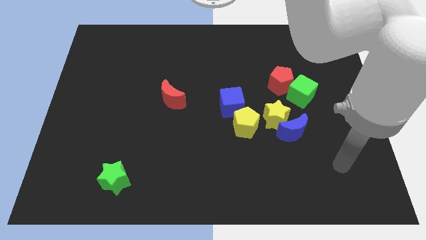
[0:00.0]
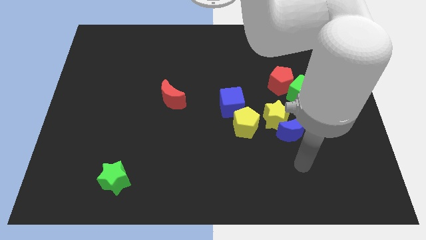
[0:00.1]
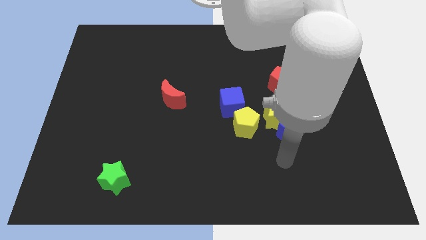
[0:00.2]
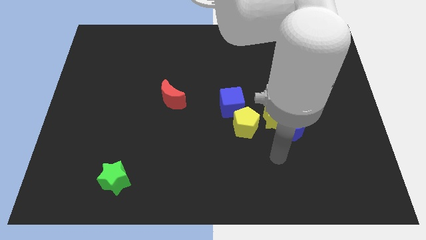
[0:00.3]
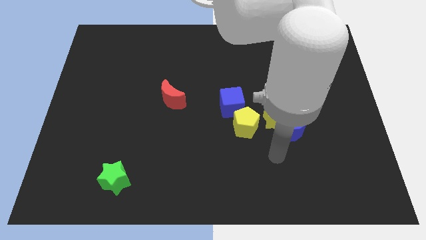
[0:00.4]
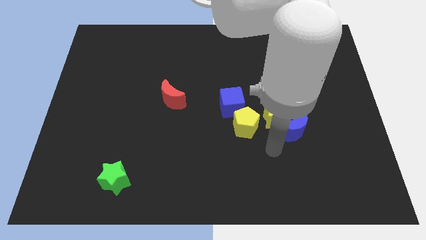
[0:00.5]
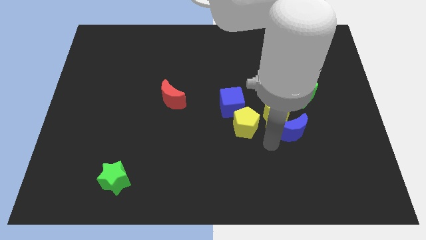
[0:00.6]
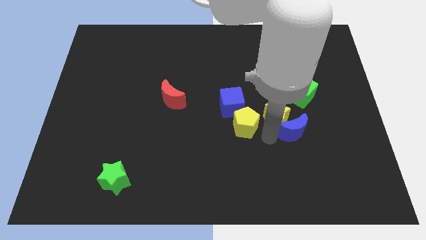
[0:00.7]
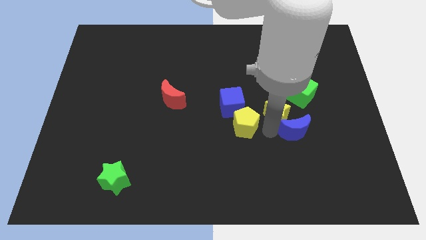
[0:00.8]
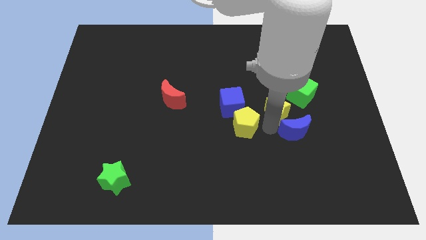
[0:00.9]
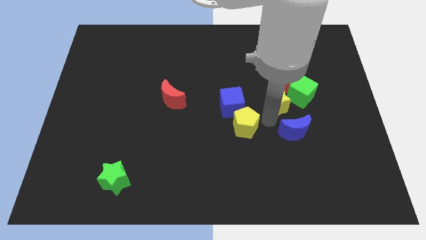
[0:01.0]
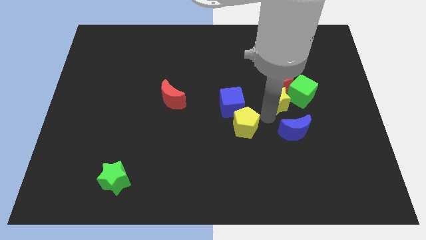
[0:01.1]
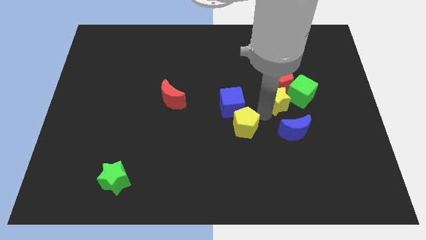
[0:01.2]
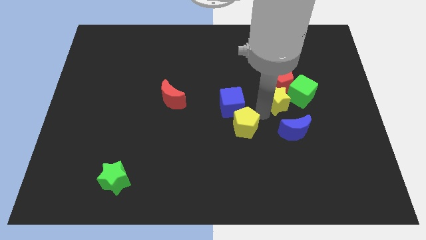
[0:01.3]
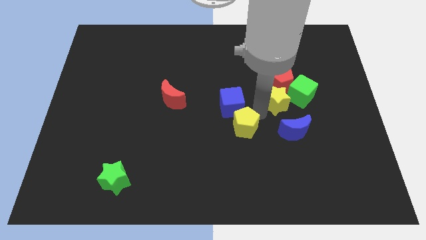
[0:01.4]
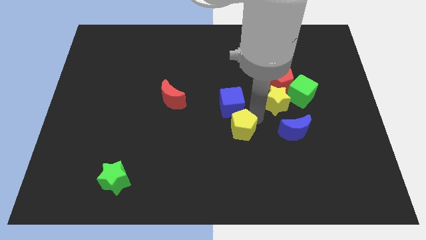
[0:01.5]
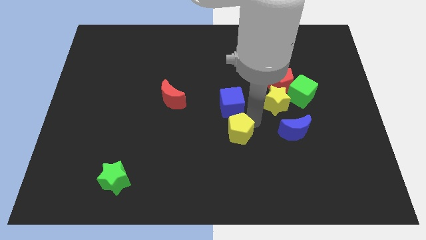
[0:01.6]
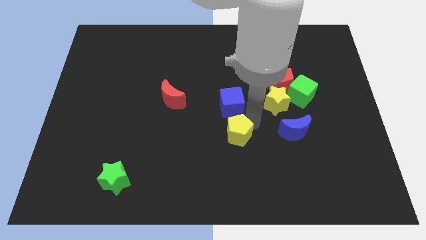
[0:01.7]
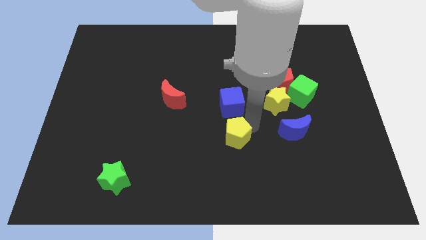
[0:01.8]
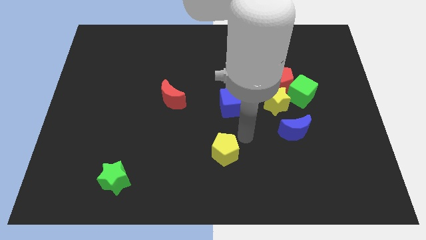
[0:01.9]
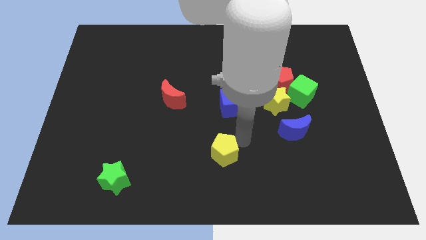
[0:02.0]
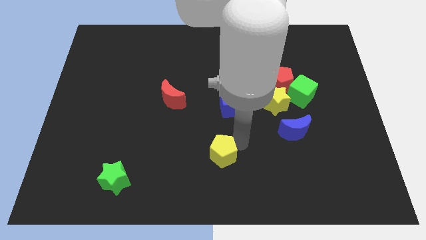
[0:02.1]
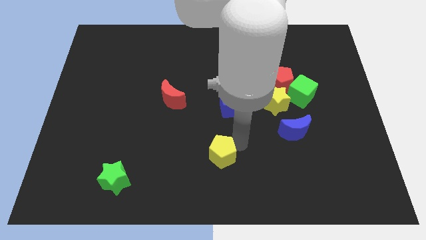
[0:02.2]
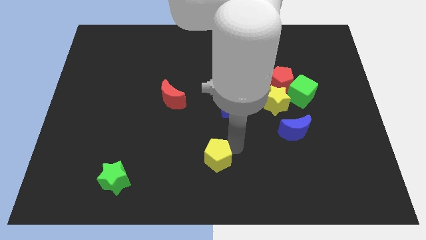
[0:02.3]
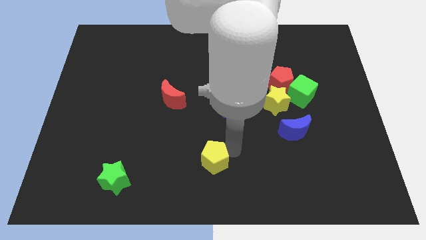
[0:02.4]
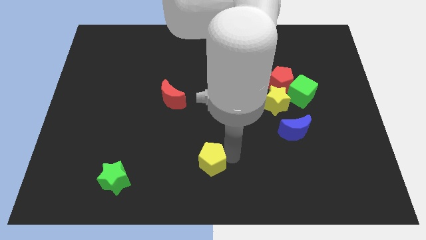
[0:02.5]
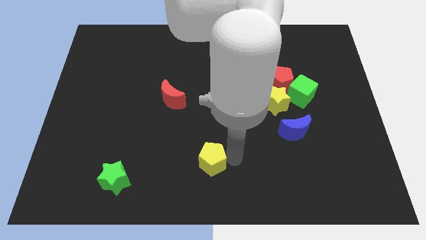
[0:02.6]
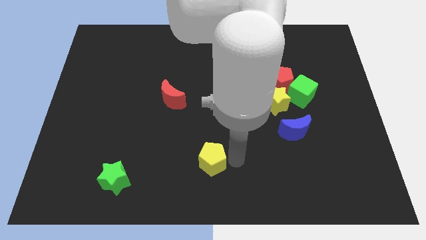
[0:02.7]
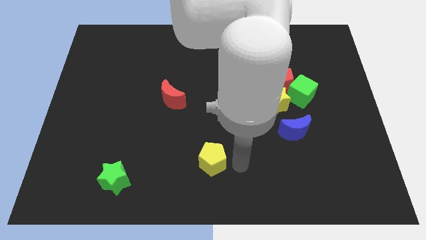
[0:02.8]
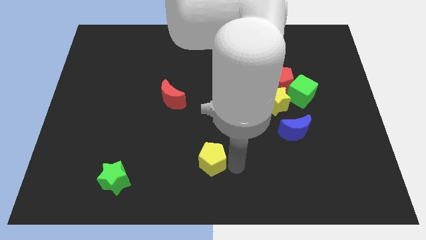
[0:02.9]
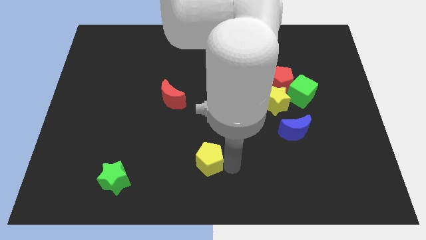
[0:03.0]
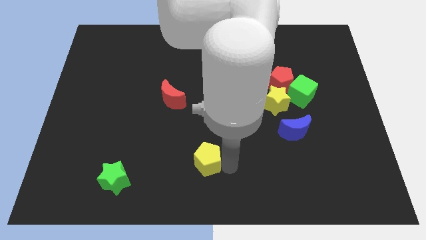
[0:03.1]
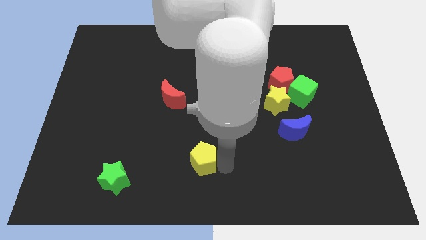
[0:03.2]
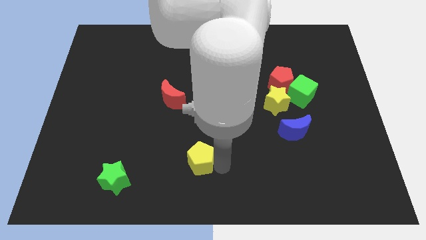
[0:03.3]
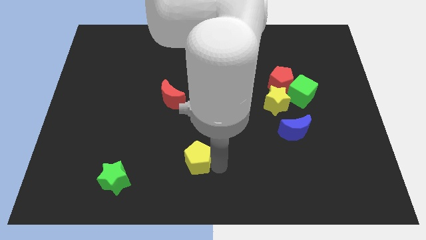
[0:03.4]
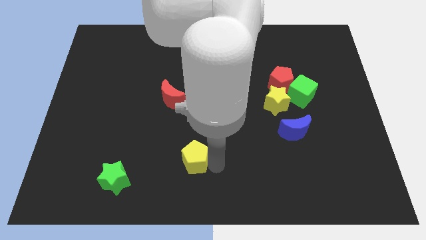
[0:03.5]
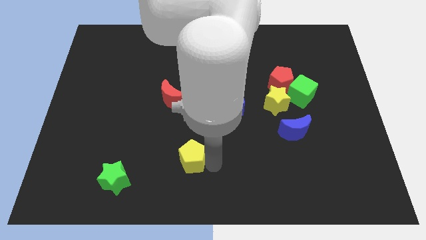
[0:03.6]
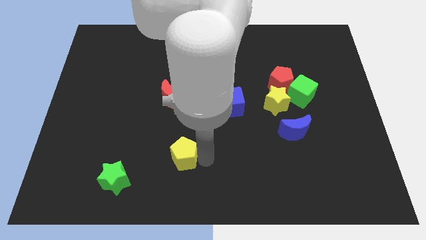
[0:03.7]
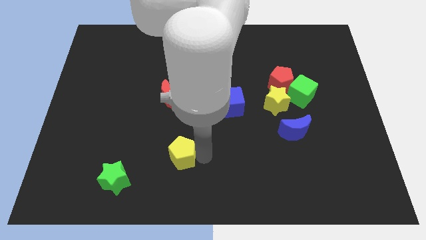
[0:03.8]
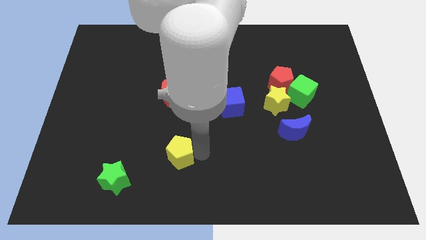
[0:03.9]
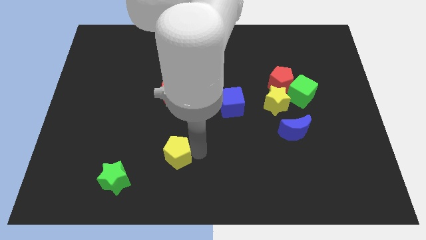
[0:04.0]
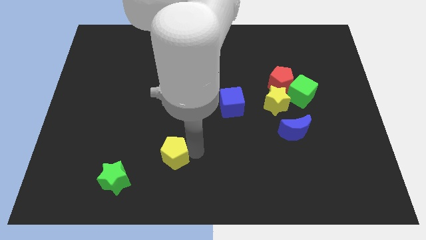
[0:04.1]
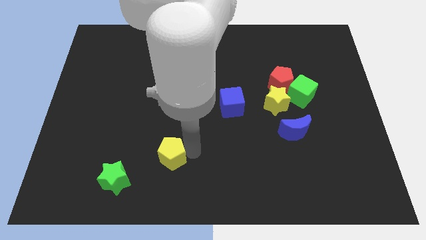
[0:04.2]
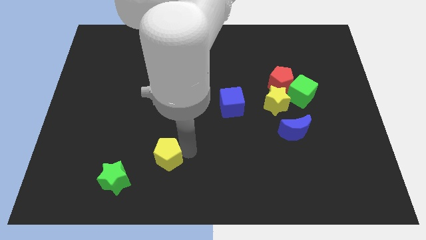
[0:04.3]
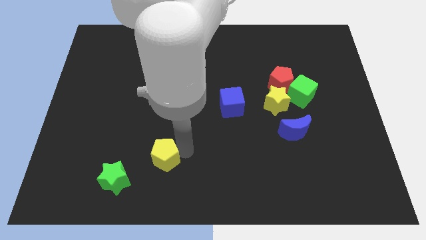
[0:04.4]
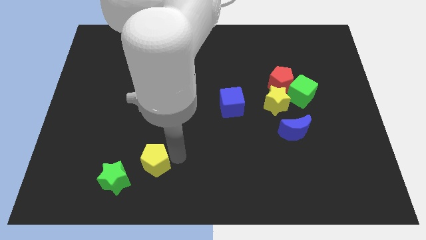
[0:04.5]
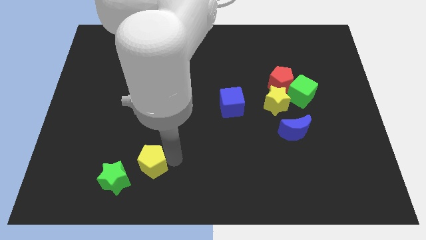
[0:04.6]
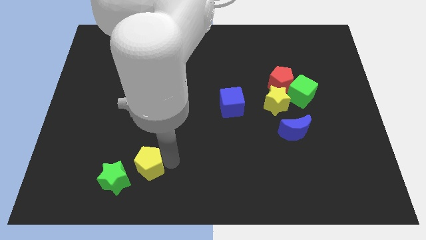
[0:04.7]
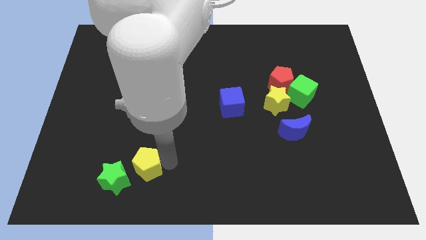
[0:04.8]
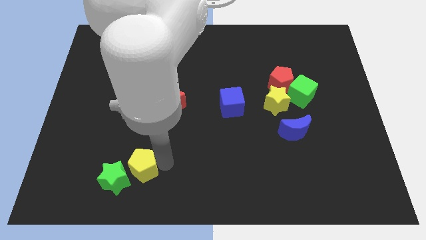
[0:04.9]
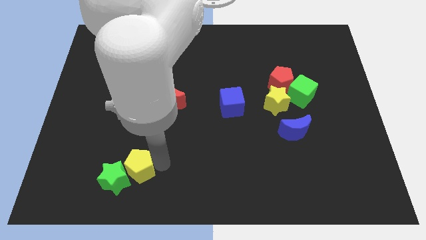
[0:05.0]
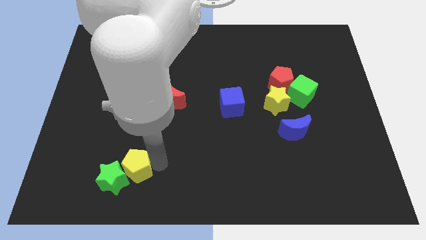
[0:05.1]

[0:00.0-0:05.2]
move the yellow pentagon next to the green star

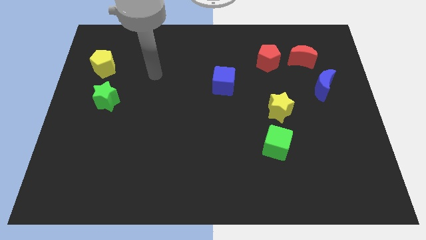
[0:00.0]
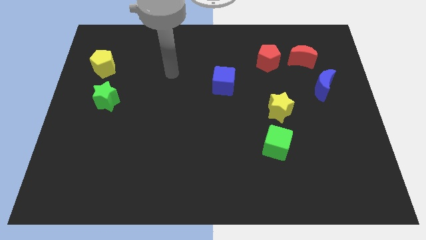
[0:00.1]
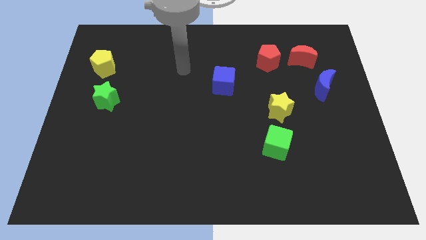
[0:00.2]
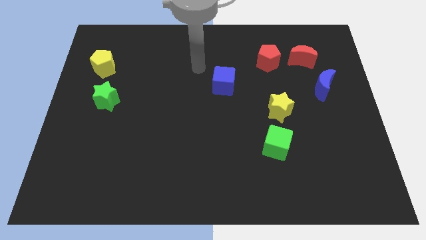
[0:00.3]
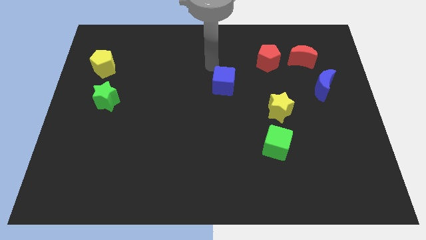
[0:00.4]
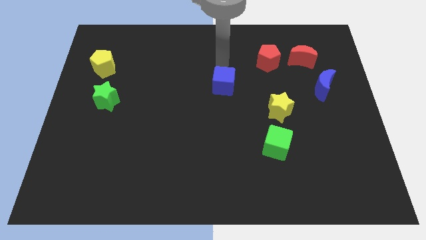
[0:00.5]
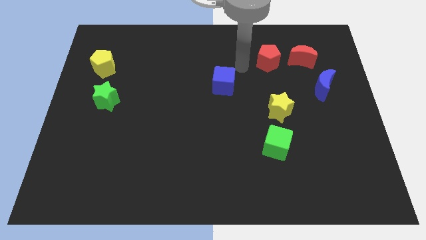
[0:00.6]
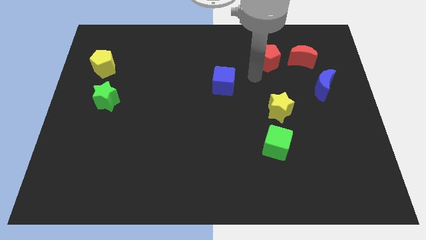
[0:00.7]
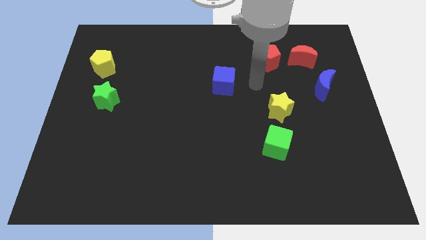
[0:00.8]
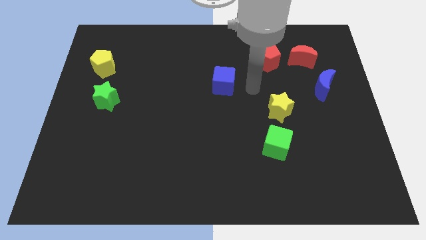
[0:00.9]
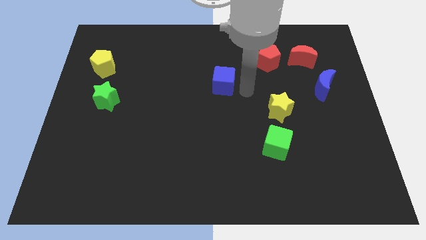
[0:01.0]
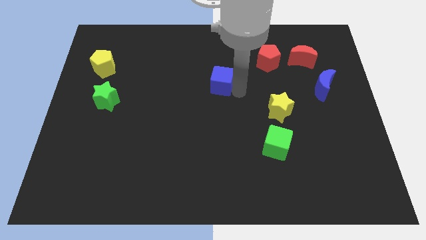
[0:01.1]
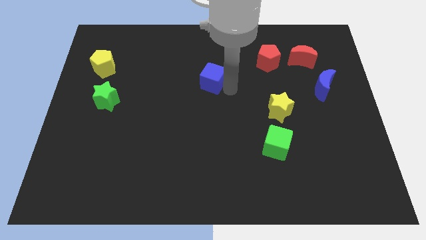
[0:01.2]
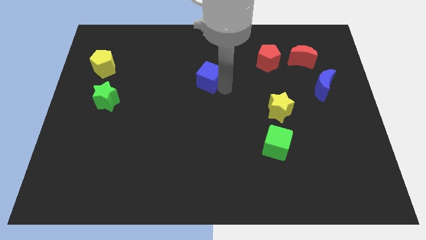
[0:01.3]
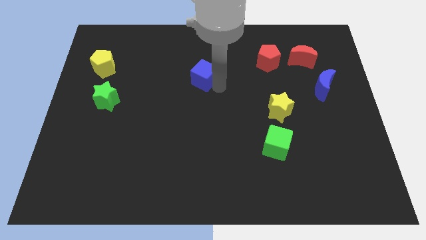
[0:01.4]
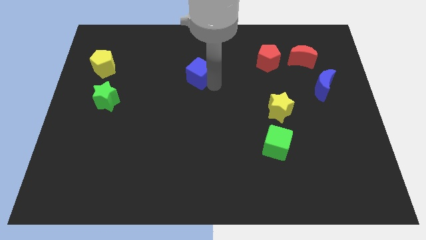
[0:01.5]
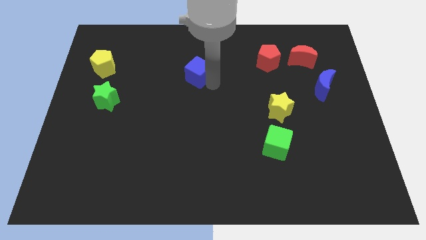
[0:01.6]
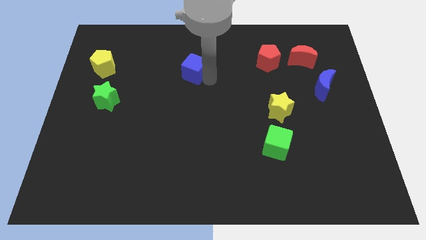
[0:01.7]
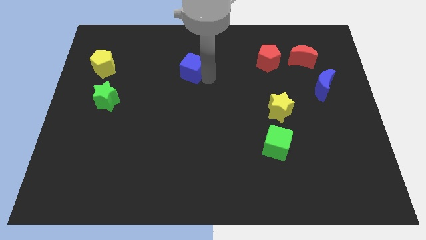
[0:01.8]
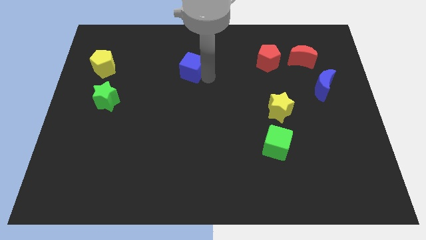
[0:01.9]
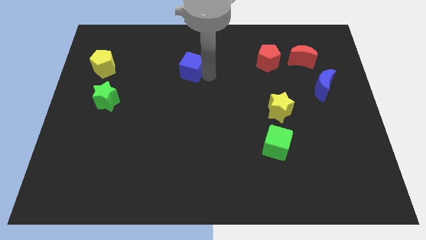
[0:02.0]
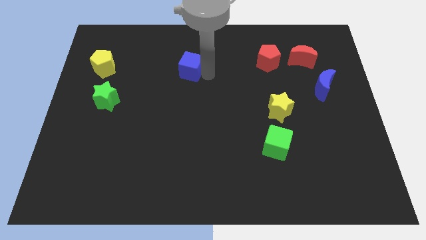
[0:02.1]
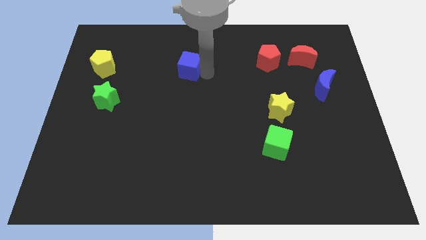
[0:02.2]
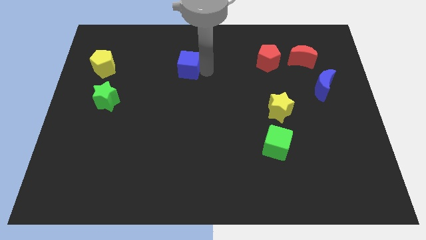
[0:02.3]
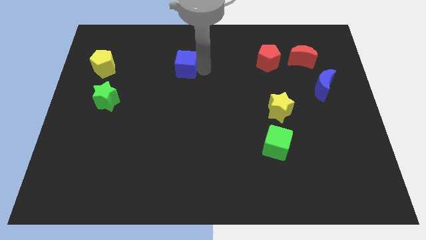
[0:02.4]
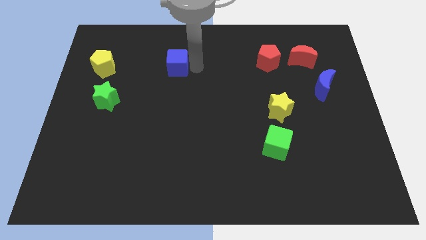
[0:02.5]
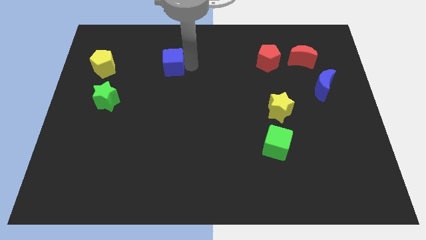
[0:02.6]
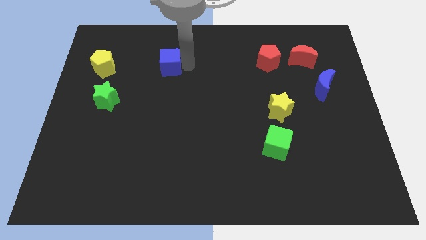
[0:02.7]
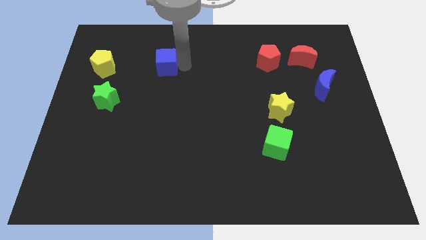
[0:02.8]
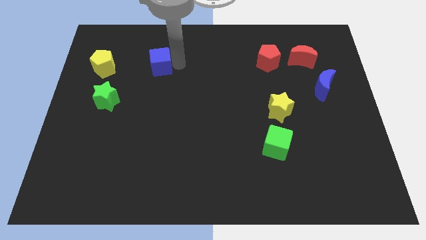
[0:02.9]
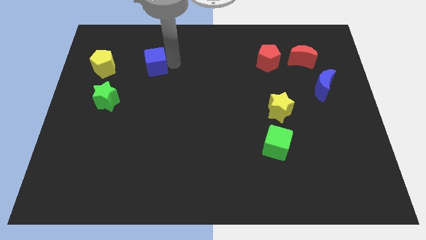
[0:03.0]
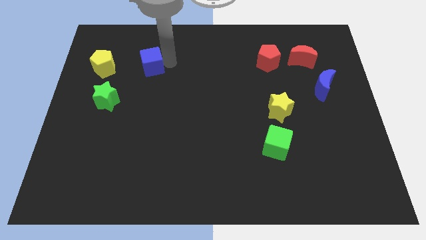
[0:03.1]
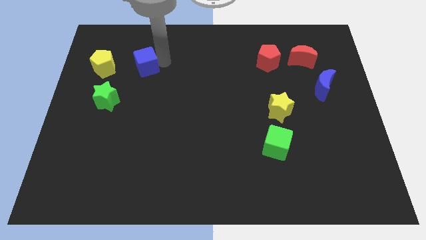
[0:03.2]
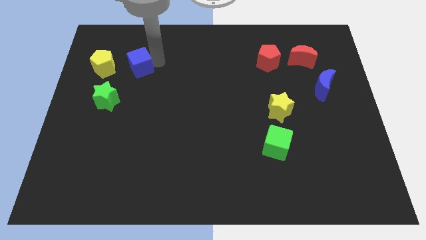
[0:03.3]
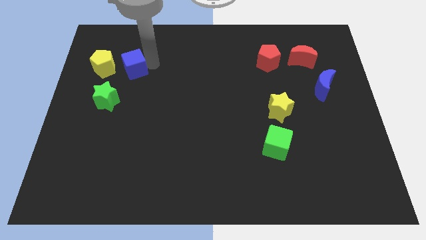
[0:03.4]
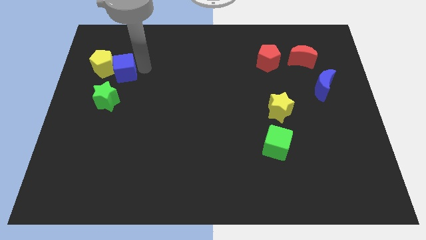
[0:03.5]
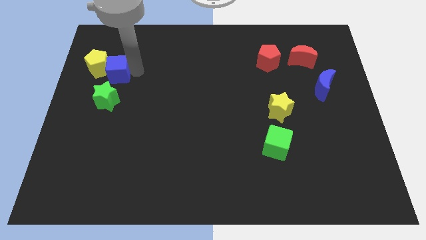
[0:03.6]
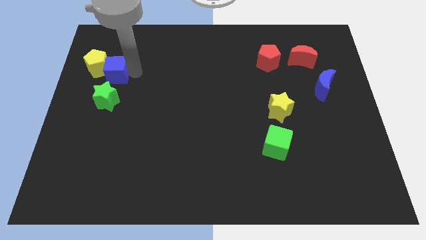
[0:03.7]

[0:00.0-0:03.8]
put the blue cube to the yellow pentagon
